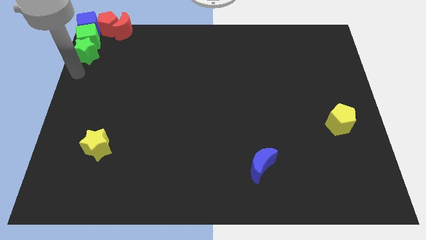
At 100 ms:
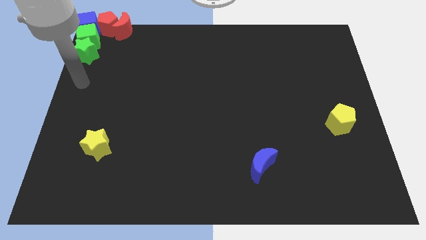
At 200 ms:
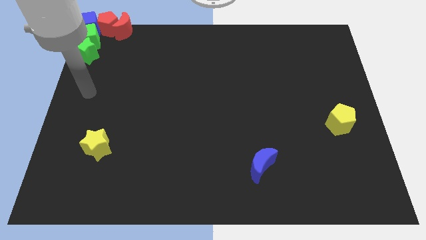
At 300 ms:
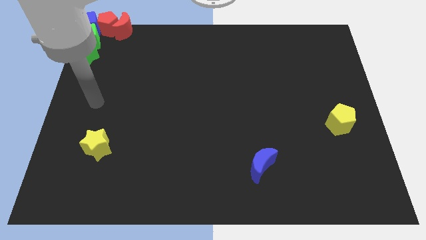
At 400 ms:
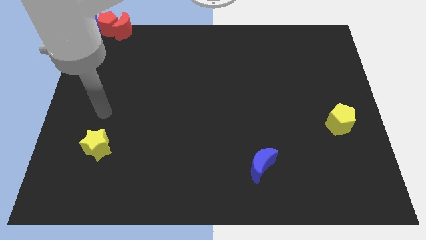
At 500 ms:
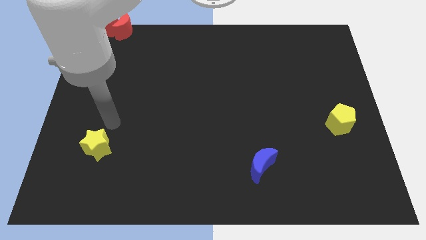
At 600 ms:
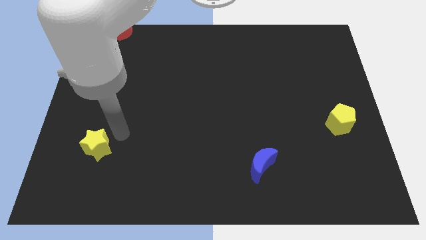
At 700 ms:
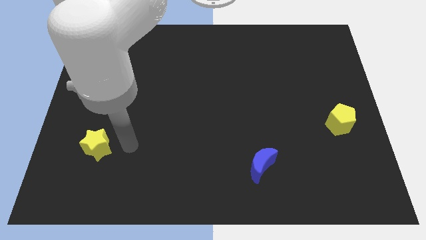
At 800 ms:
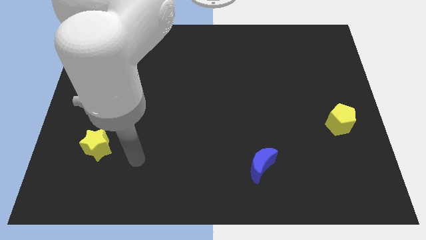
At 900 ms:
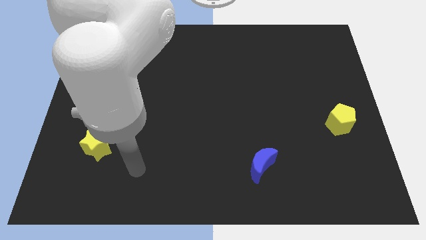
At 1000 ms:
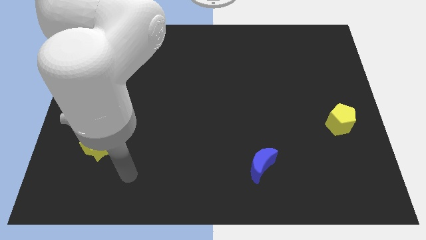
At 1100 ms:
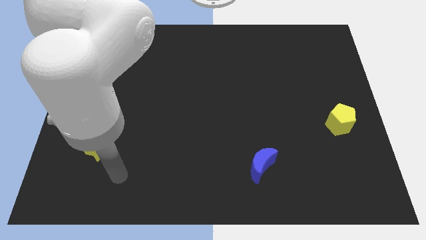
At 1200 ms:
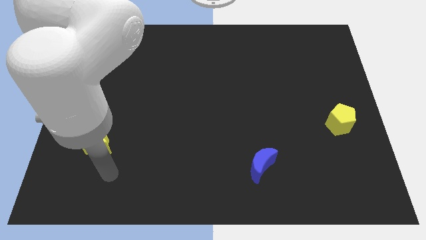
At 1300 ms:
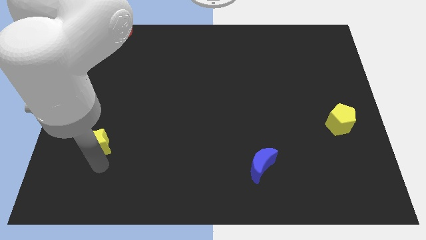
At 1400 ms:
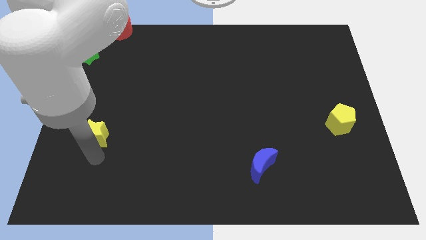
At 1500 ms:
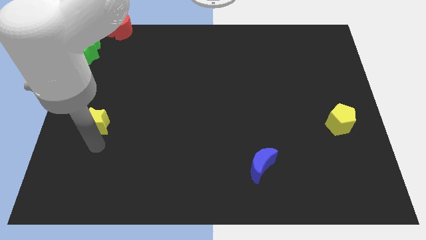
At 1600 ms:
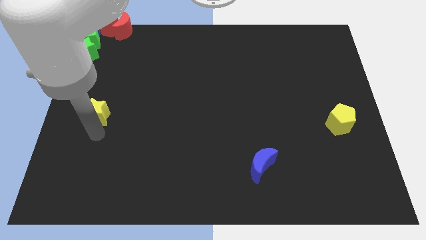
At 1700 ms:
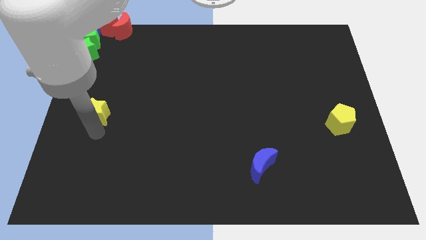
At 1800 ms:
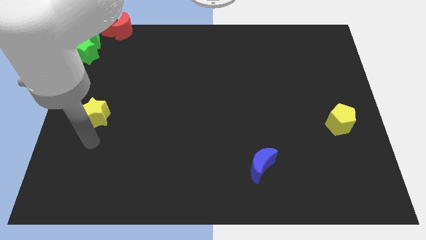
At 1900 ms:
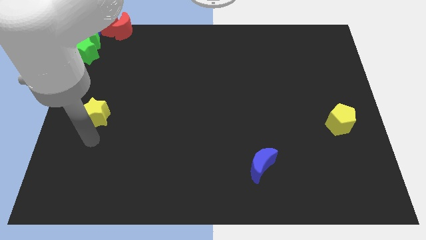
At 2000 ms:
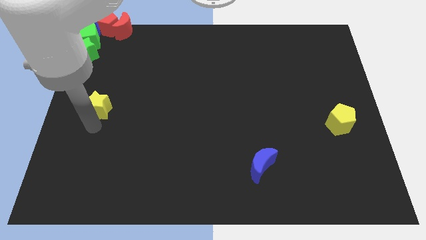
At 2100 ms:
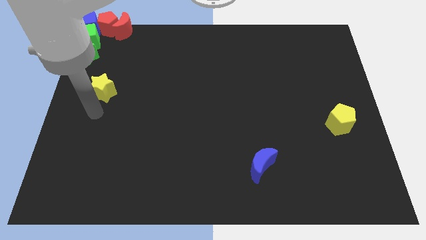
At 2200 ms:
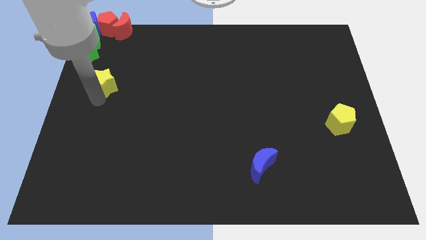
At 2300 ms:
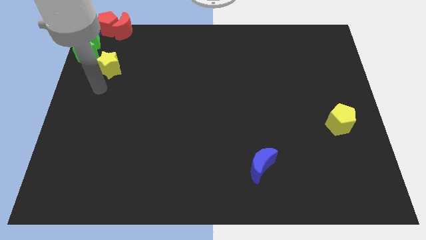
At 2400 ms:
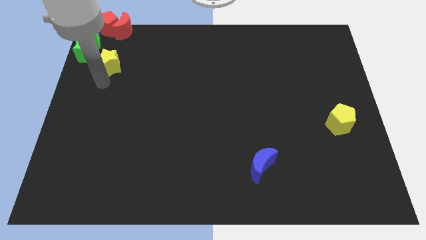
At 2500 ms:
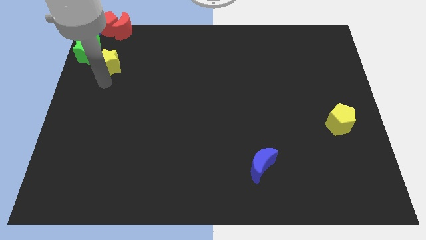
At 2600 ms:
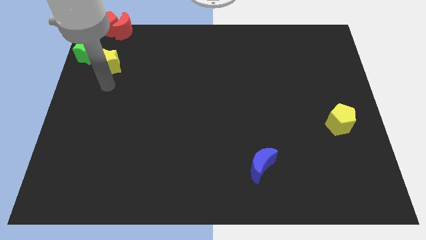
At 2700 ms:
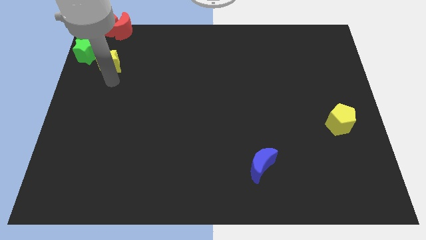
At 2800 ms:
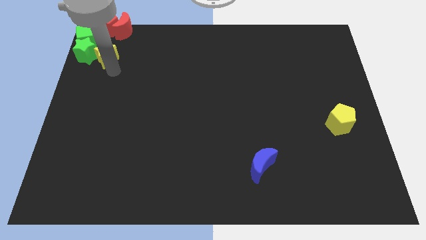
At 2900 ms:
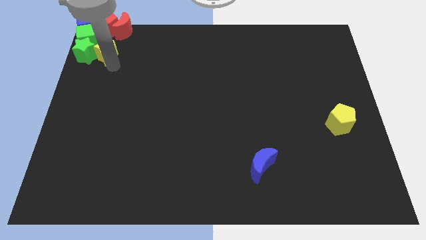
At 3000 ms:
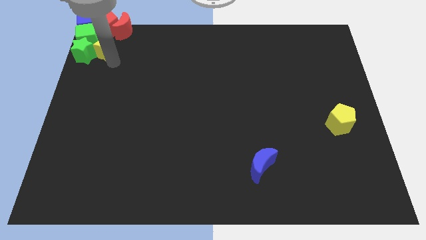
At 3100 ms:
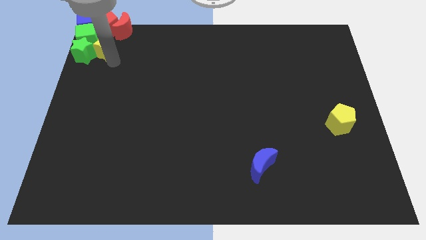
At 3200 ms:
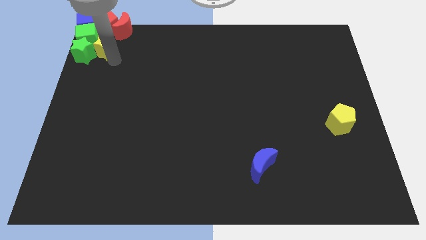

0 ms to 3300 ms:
place the yellow star right of green star

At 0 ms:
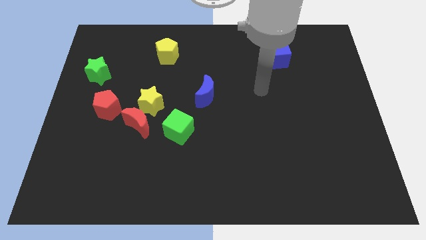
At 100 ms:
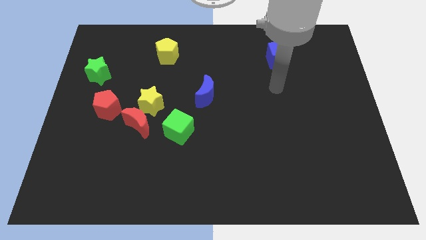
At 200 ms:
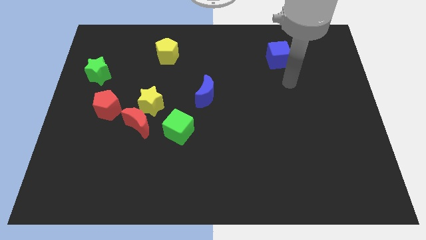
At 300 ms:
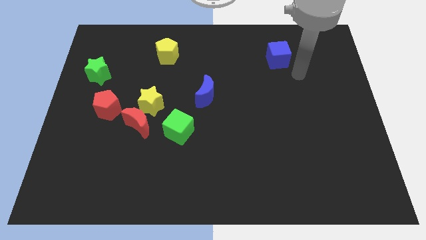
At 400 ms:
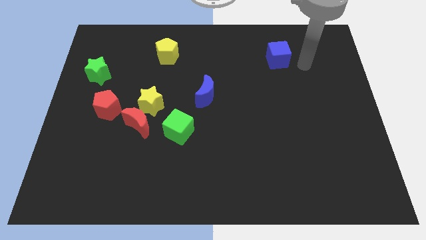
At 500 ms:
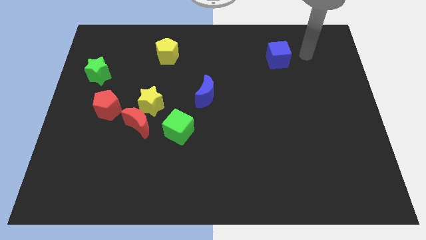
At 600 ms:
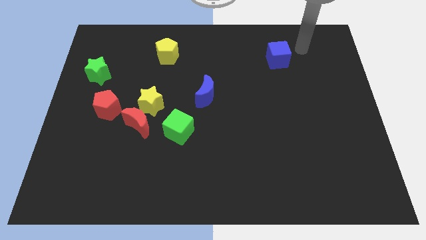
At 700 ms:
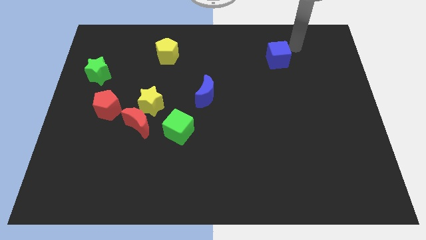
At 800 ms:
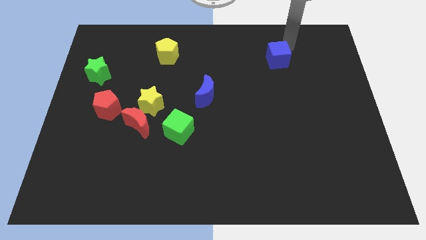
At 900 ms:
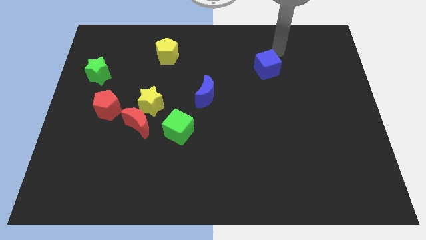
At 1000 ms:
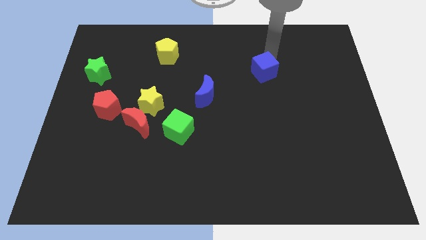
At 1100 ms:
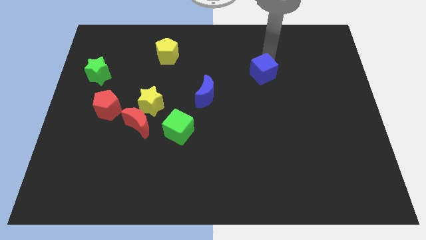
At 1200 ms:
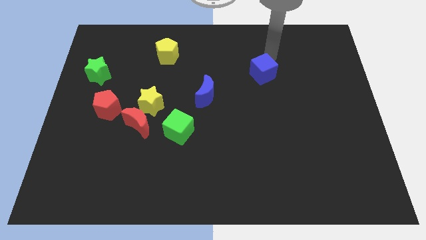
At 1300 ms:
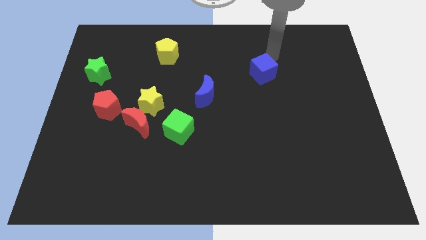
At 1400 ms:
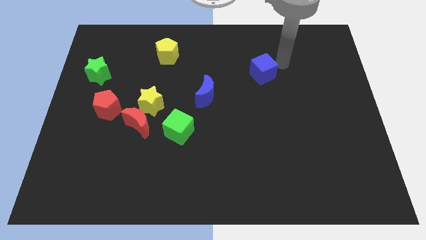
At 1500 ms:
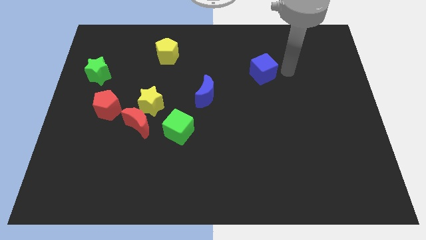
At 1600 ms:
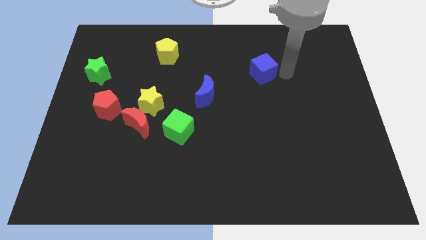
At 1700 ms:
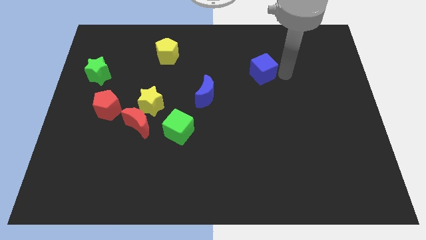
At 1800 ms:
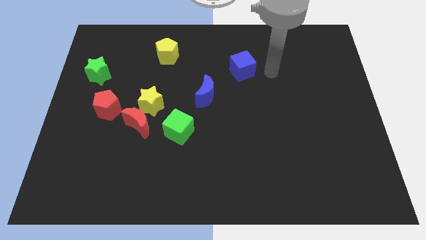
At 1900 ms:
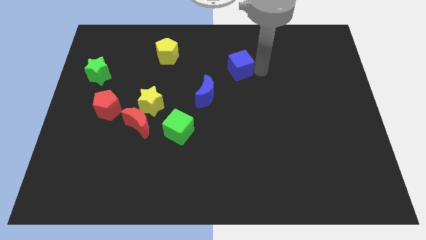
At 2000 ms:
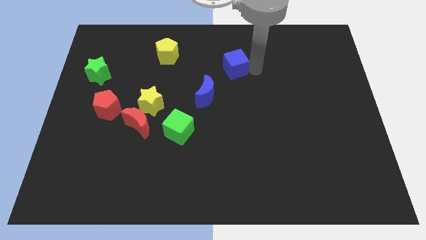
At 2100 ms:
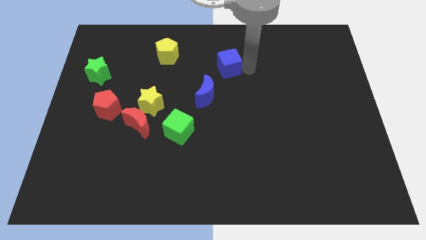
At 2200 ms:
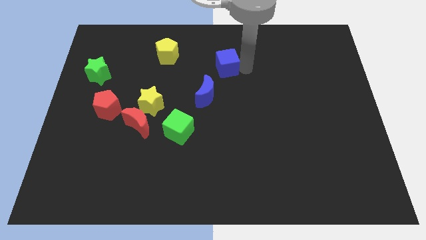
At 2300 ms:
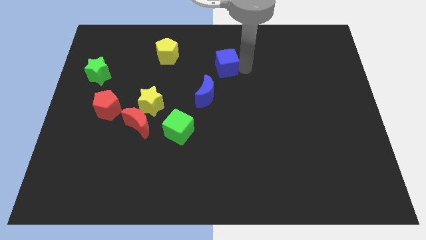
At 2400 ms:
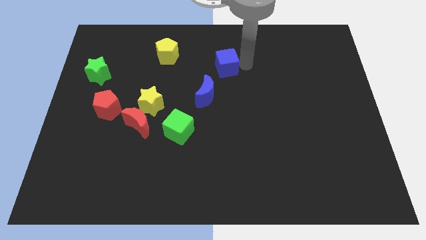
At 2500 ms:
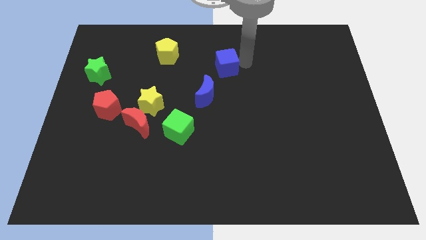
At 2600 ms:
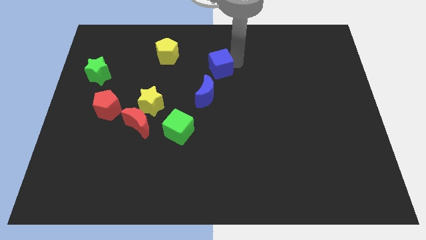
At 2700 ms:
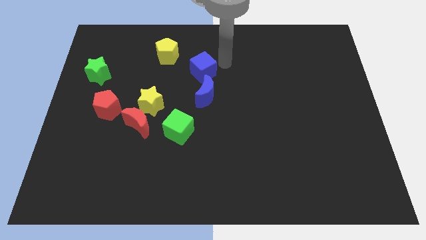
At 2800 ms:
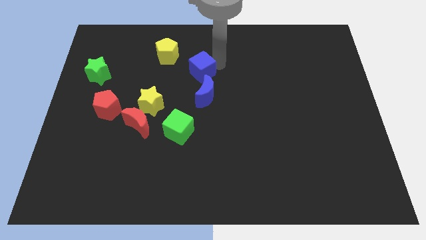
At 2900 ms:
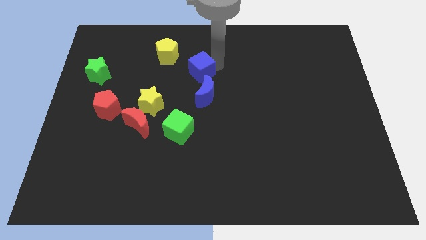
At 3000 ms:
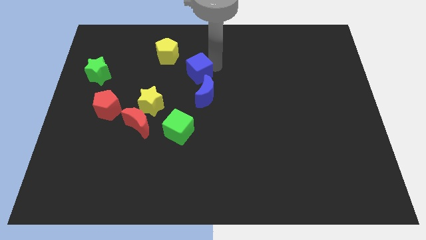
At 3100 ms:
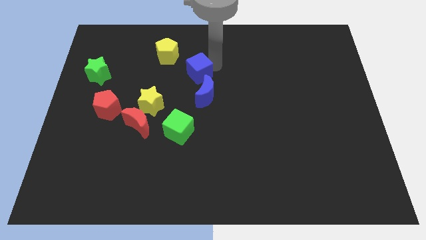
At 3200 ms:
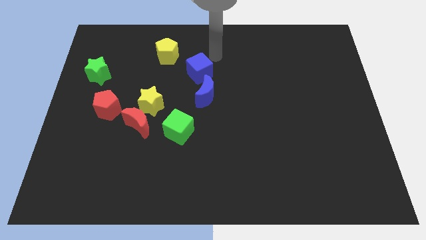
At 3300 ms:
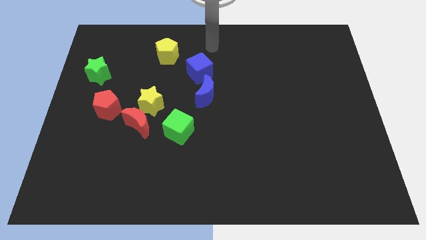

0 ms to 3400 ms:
push blue cube above blue crescent

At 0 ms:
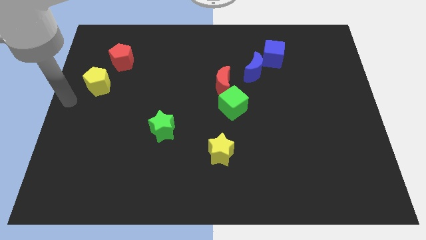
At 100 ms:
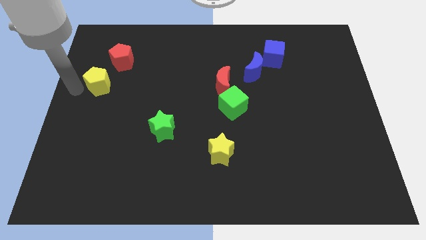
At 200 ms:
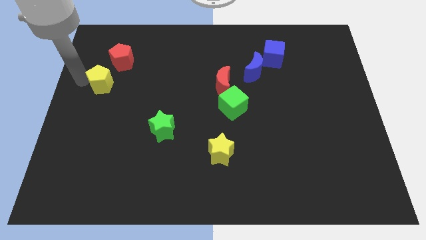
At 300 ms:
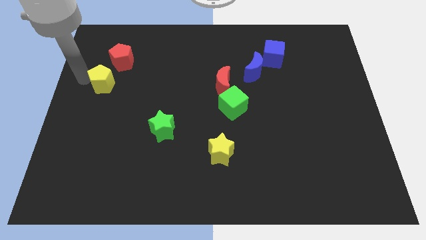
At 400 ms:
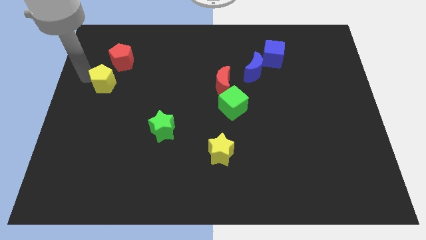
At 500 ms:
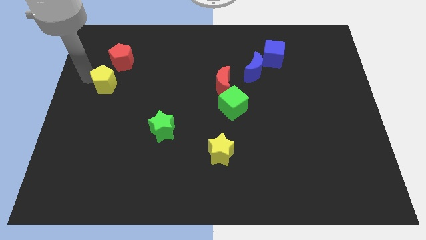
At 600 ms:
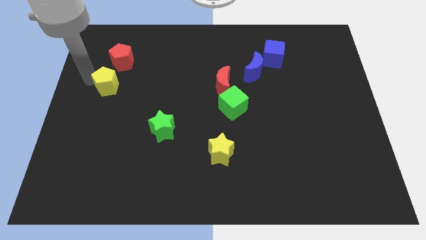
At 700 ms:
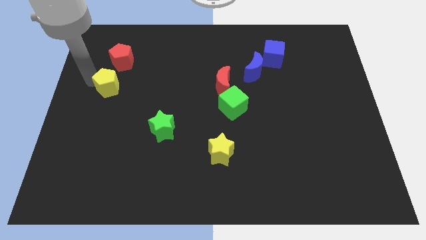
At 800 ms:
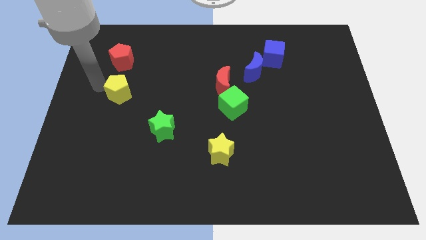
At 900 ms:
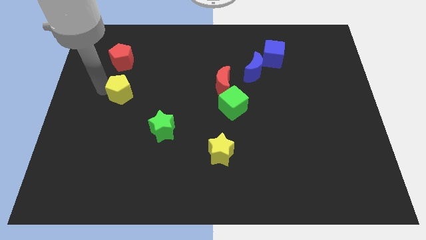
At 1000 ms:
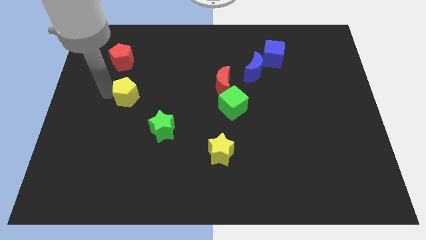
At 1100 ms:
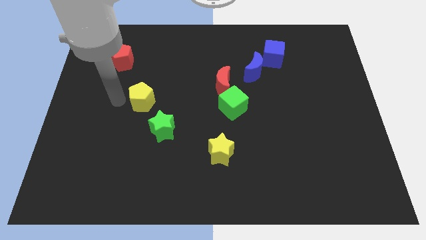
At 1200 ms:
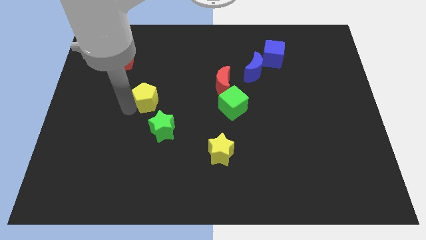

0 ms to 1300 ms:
push the yellow pentagon towards the green star

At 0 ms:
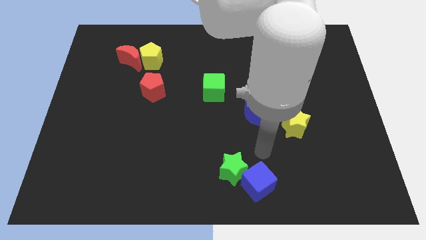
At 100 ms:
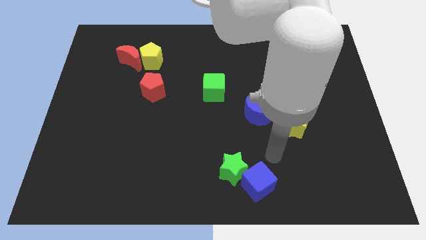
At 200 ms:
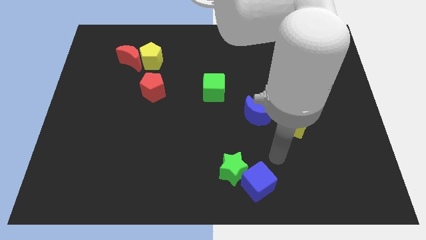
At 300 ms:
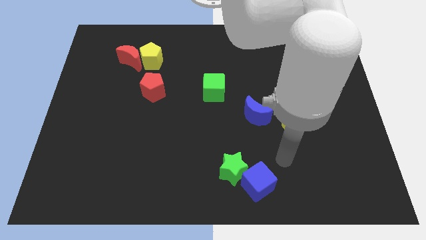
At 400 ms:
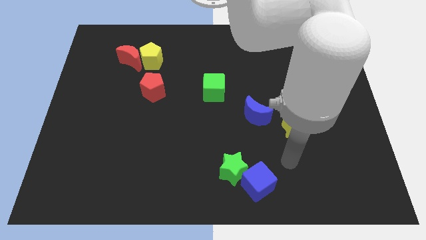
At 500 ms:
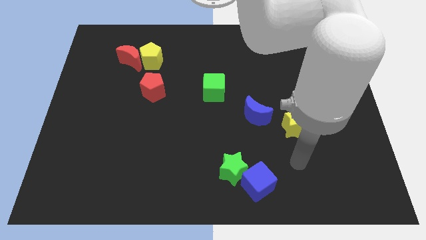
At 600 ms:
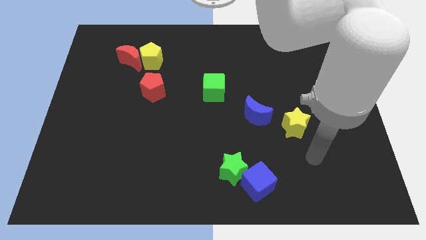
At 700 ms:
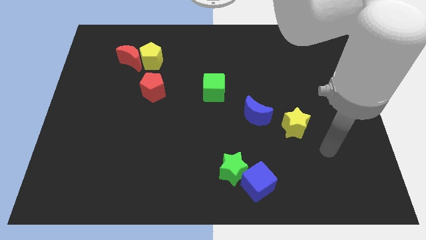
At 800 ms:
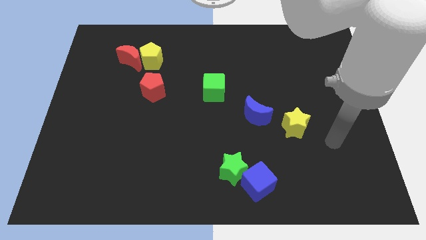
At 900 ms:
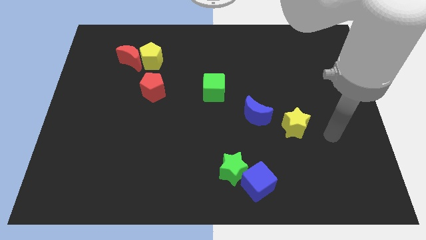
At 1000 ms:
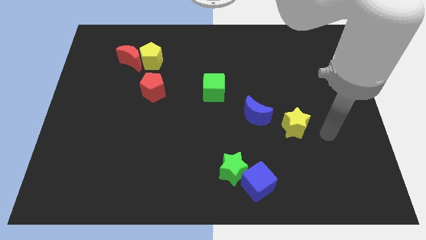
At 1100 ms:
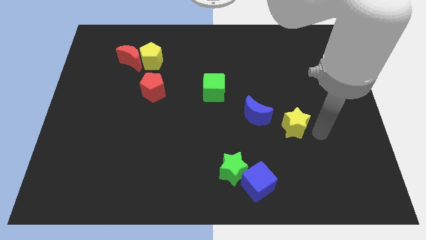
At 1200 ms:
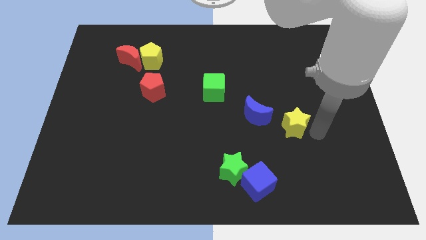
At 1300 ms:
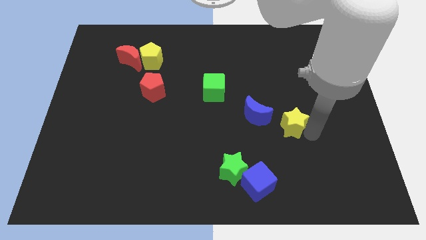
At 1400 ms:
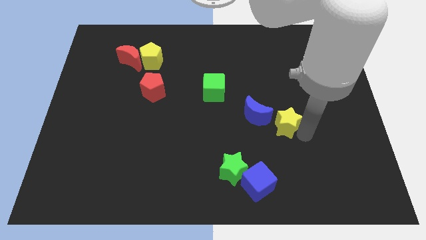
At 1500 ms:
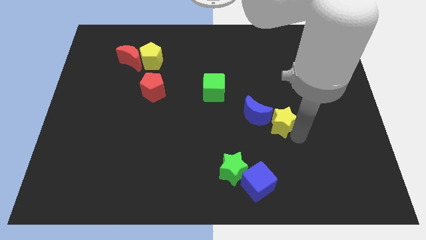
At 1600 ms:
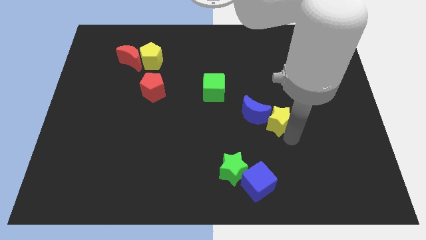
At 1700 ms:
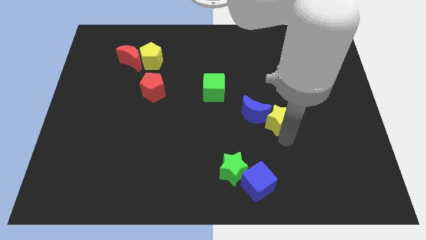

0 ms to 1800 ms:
push the yellow star into blue crescent
